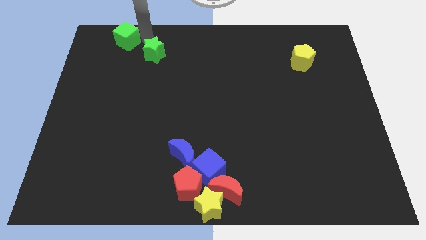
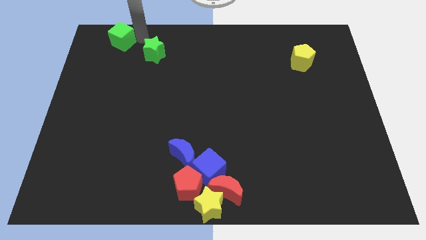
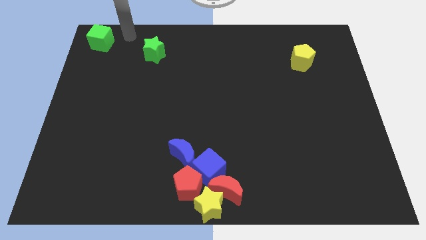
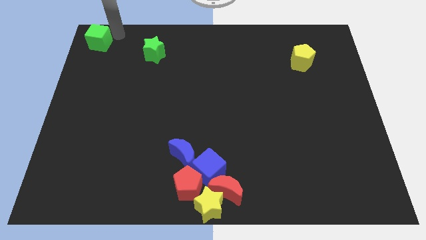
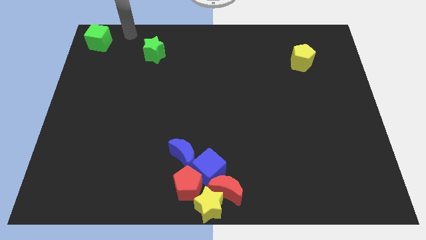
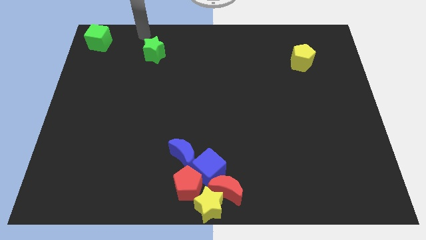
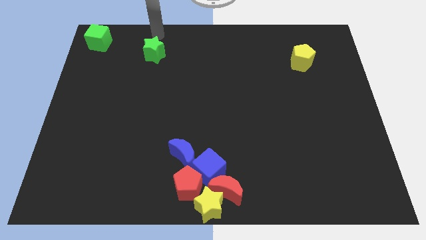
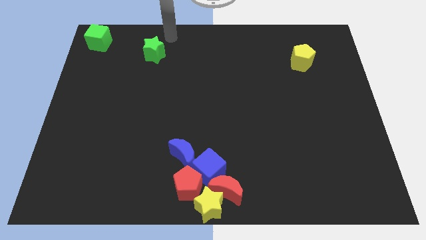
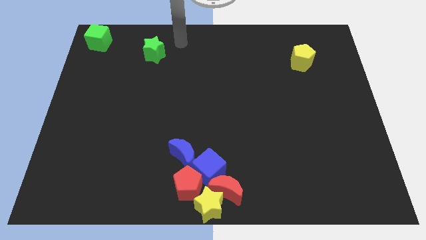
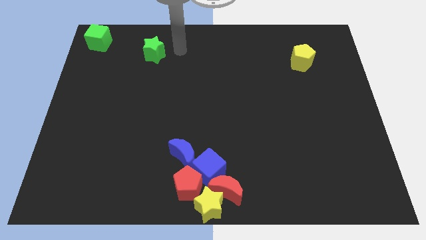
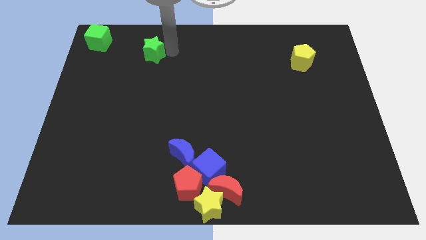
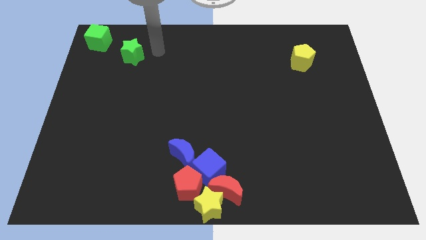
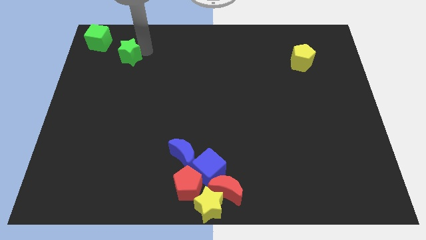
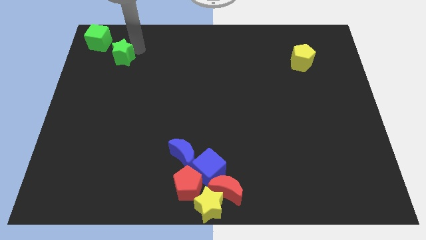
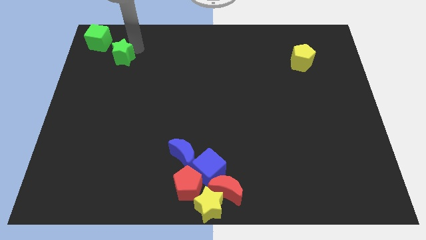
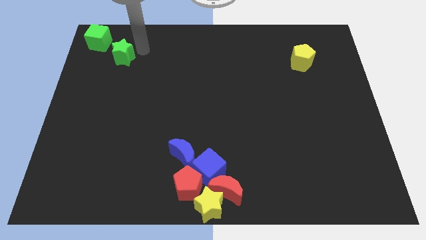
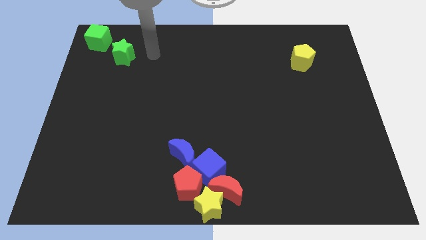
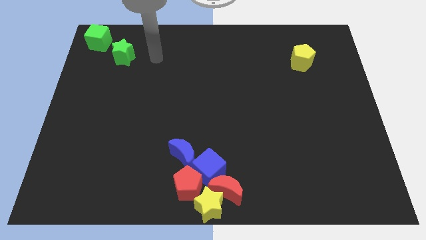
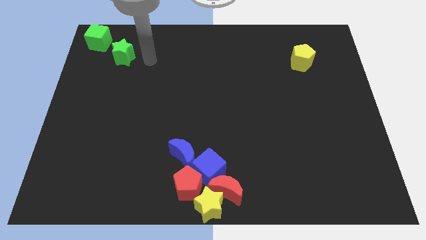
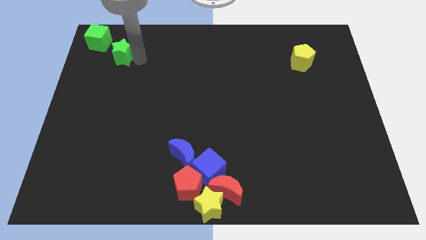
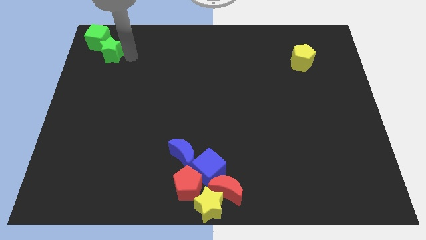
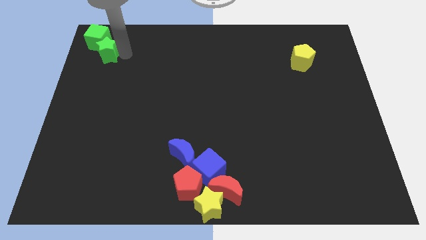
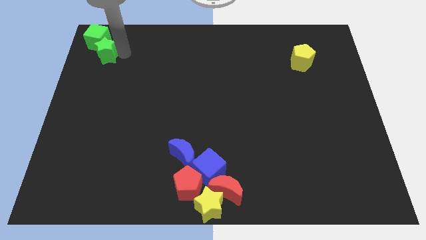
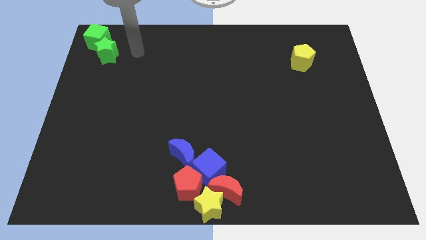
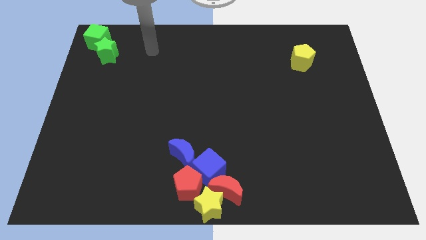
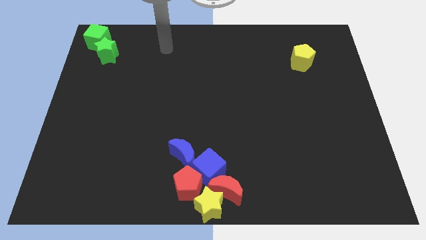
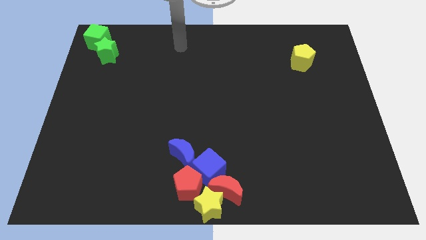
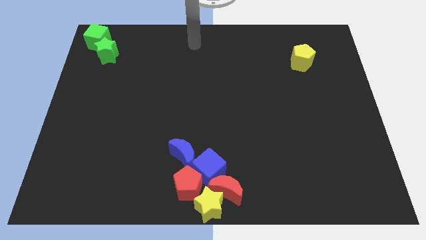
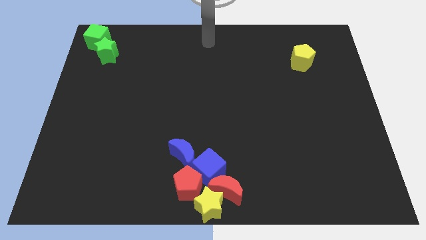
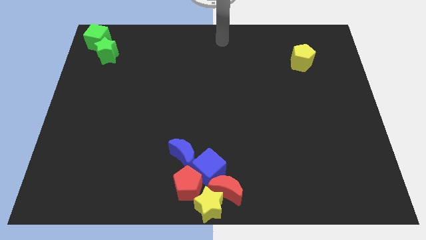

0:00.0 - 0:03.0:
move the green star below the green cube

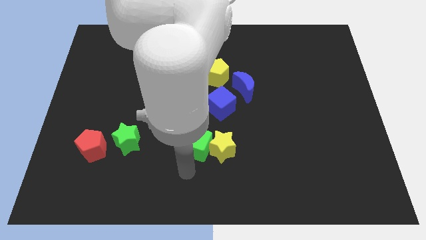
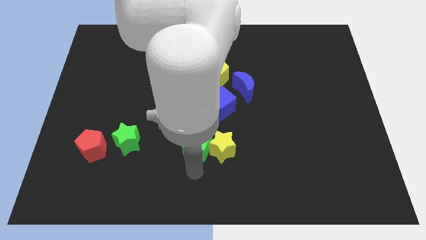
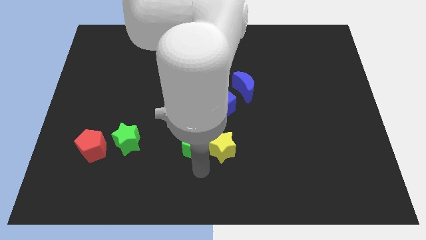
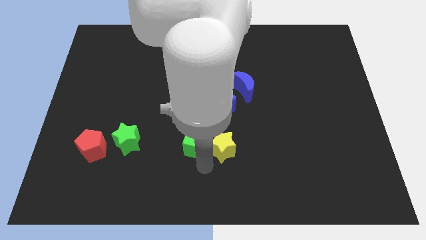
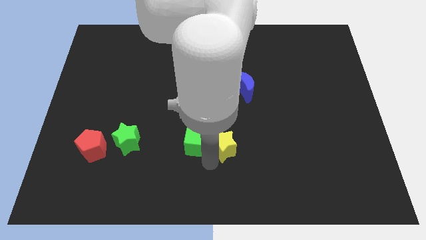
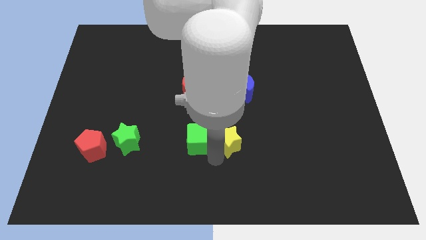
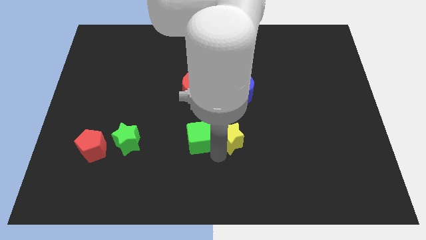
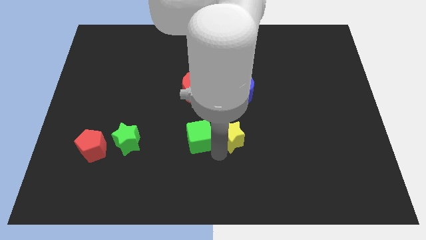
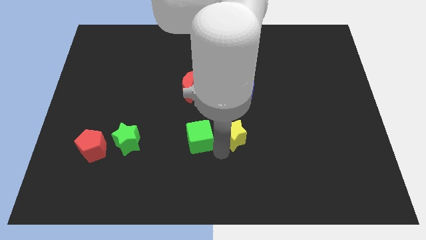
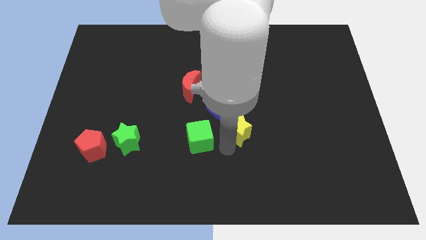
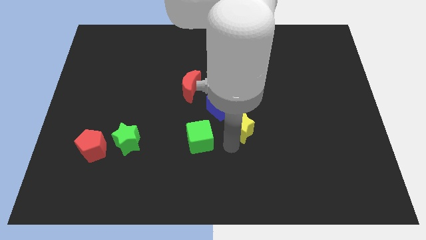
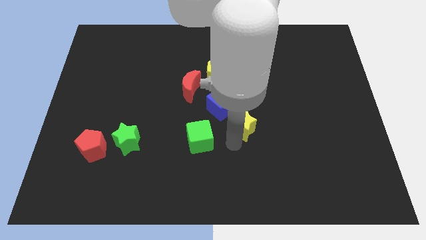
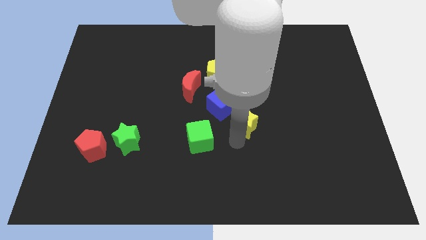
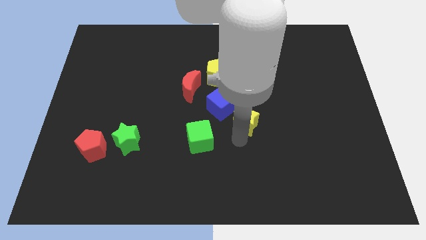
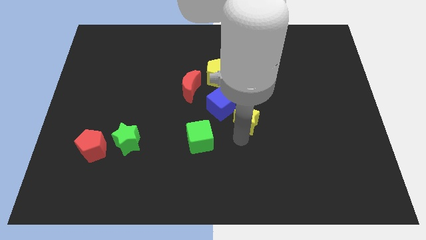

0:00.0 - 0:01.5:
separate the yellow star and the green cube

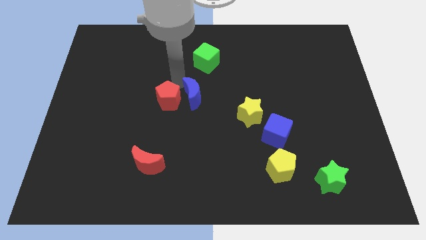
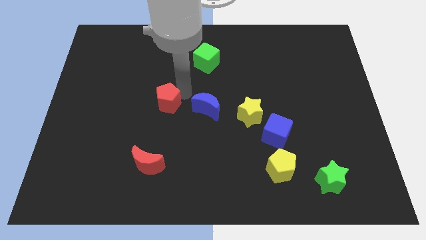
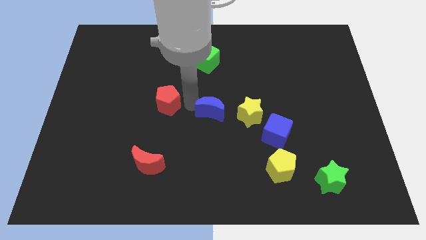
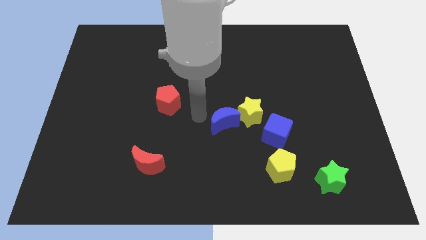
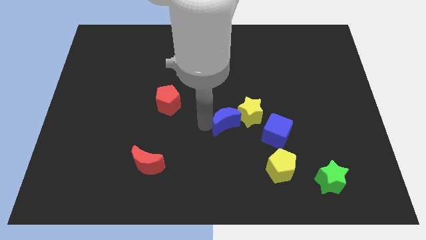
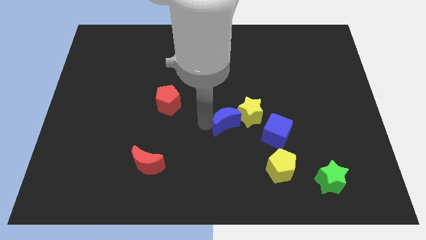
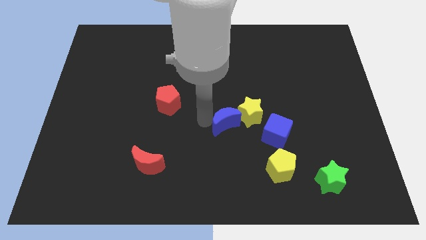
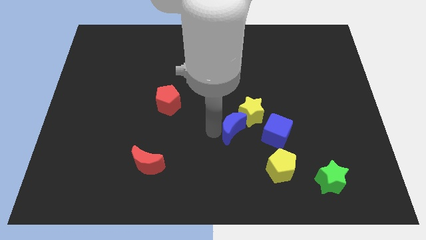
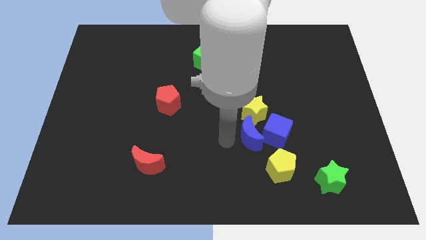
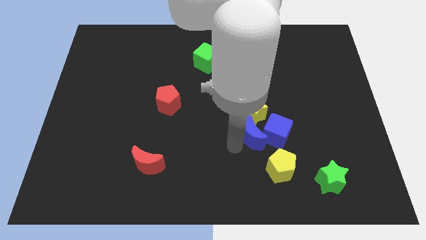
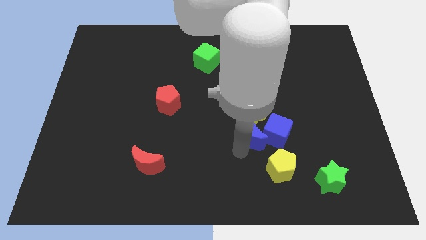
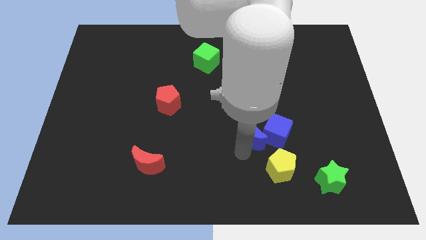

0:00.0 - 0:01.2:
move the blue moon diagonally bottom right to the red pentagon

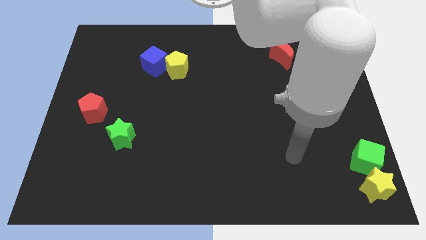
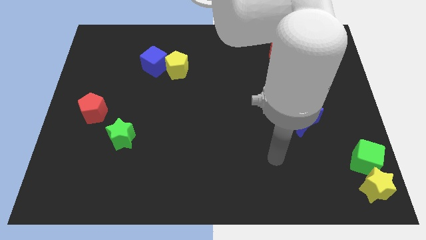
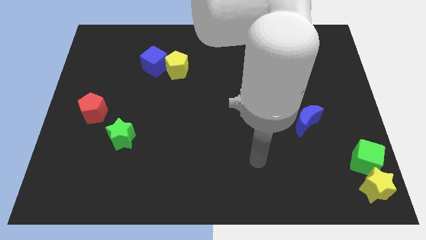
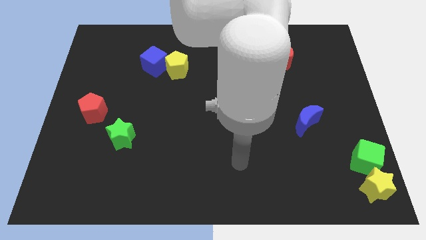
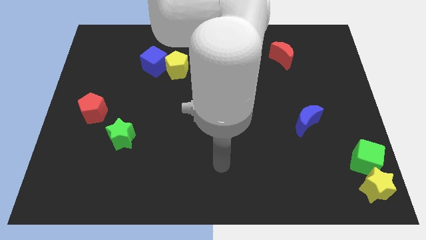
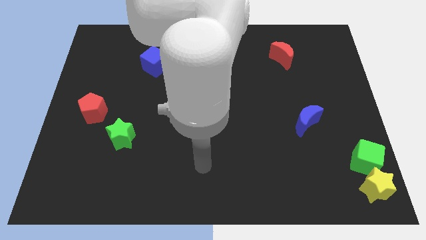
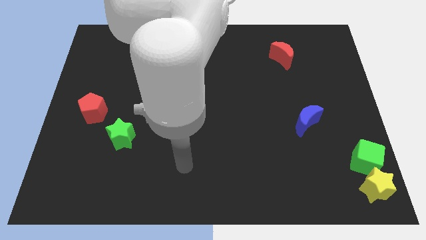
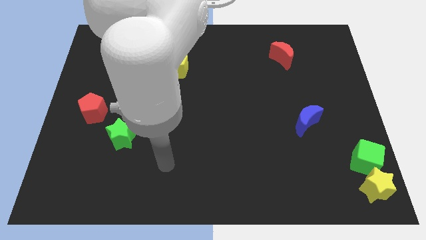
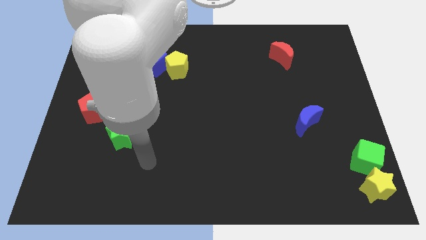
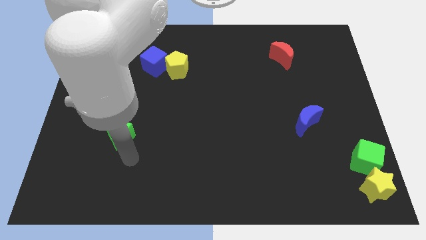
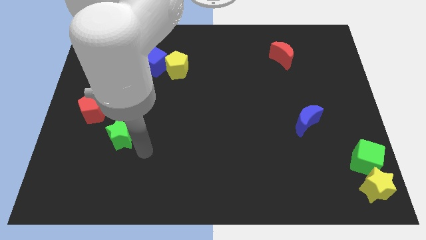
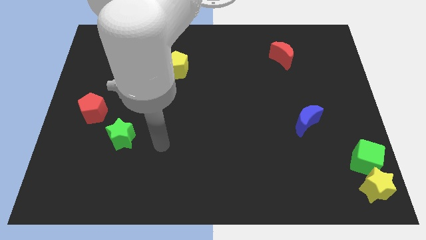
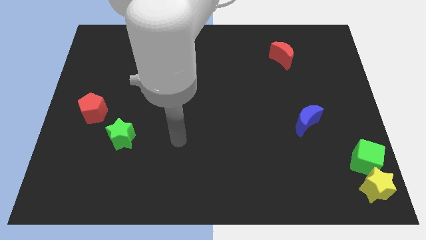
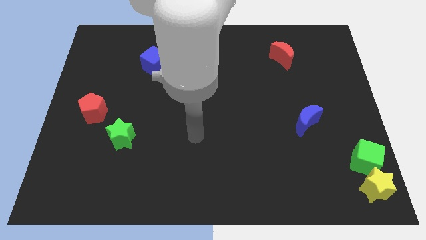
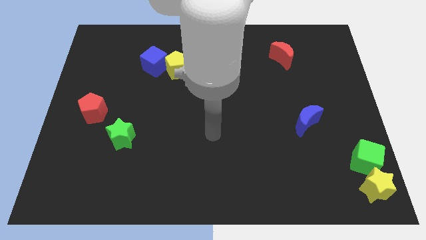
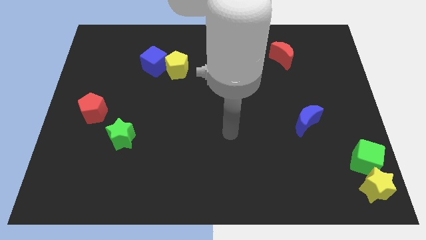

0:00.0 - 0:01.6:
point your arm parallel to blue moon

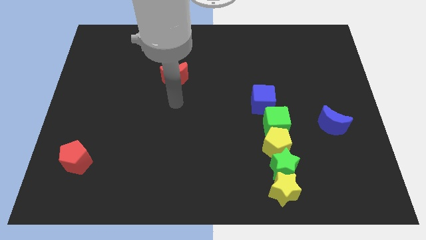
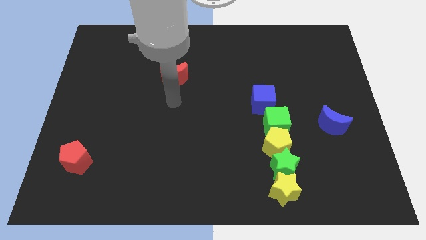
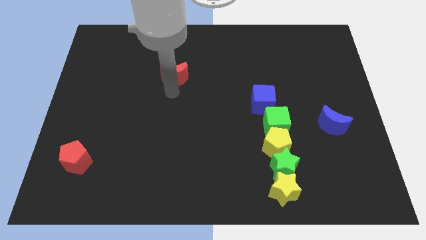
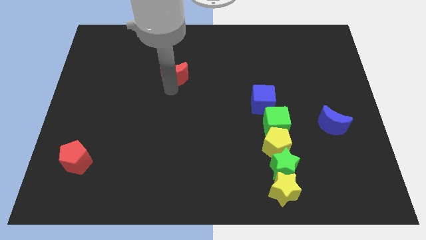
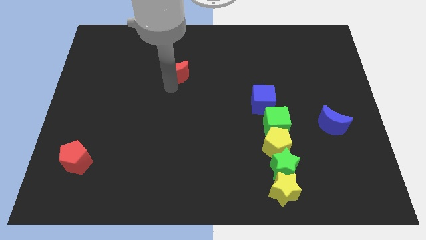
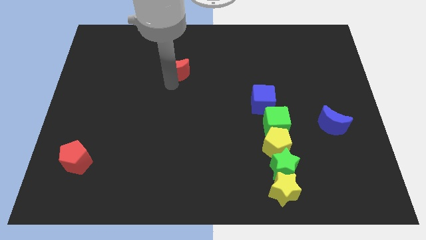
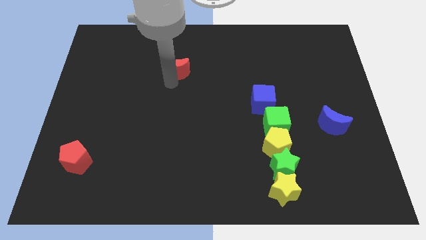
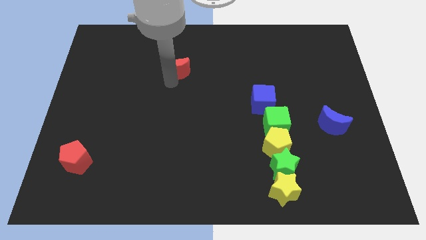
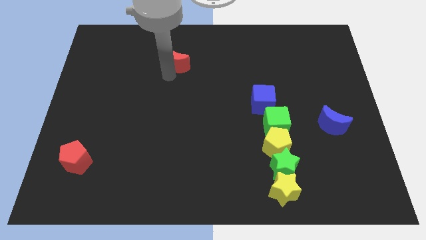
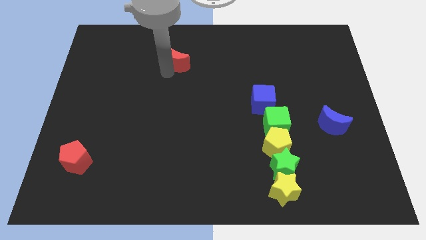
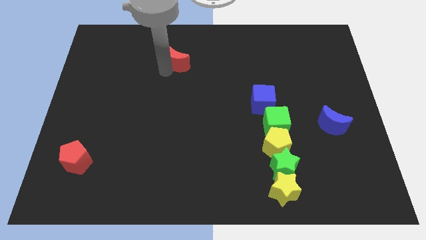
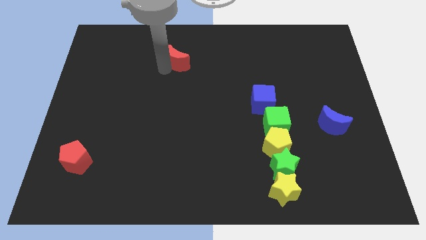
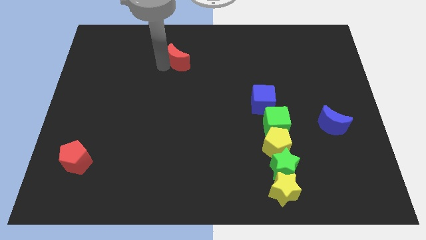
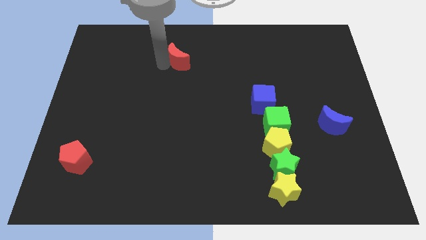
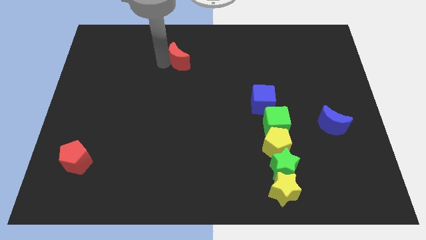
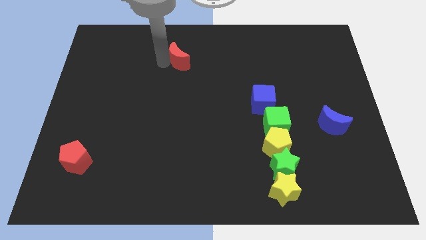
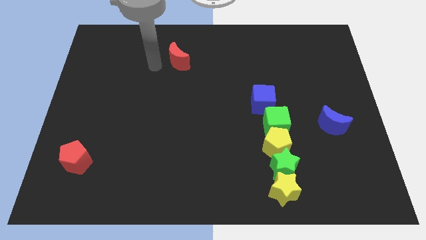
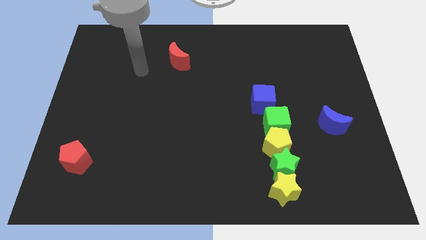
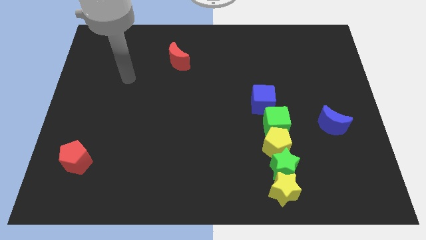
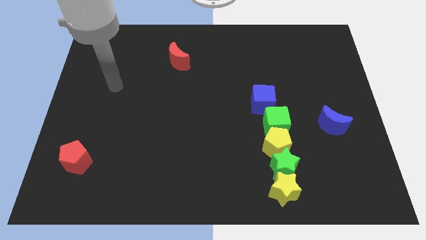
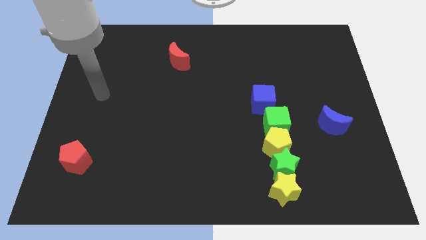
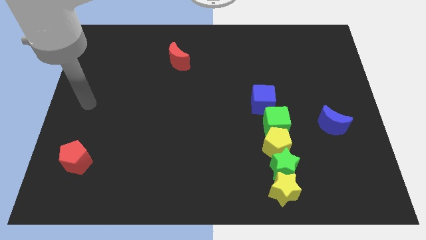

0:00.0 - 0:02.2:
move red moon towards the top center of the board
